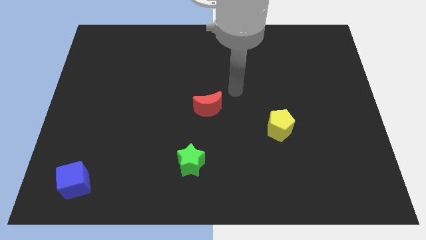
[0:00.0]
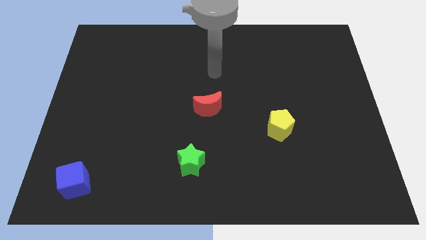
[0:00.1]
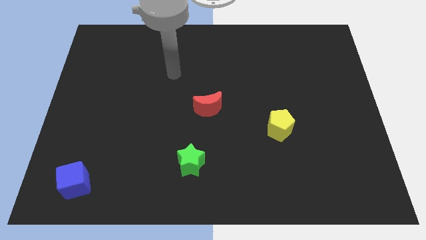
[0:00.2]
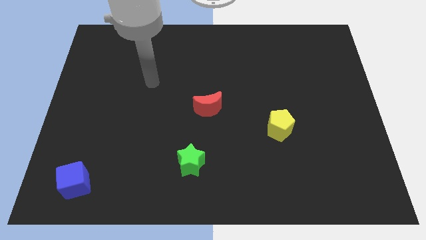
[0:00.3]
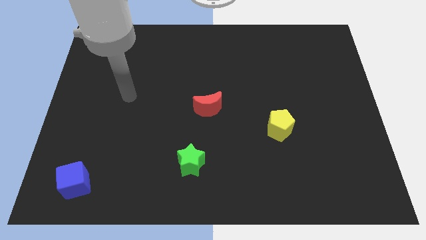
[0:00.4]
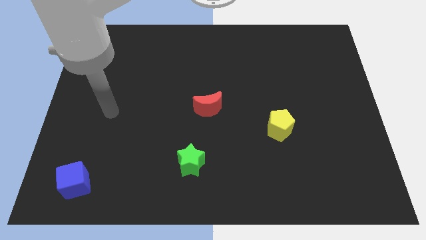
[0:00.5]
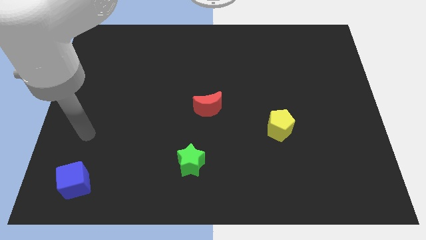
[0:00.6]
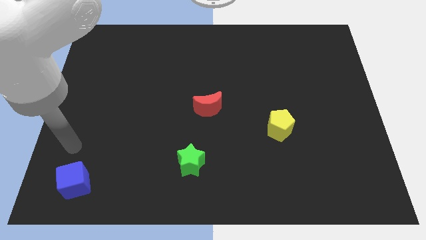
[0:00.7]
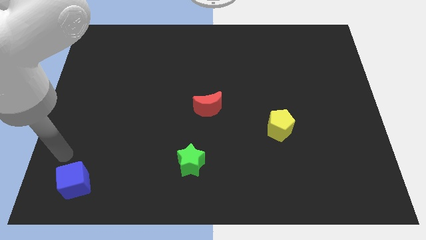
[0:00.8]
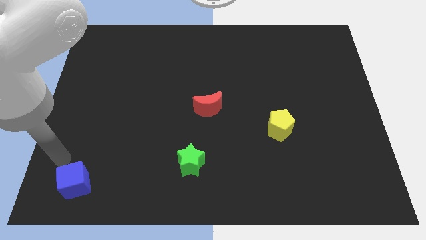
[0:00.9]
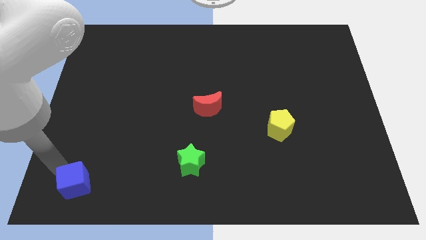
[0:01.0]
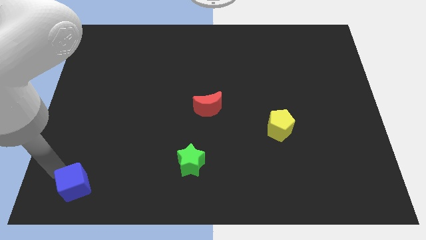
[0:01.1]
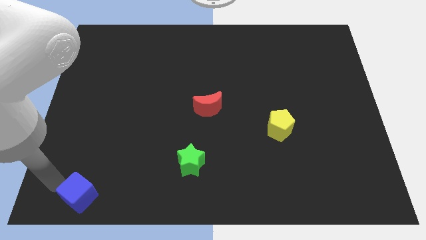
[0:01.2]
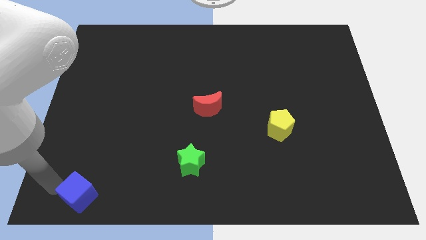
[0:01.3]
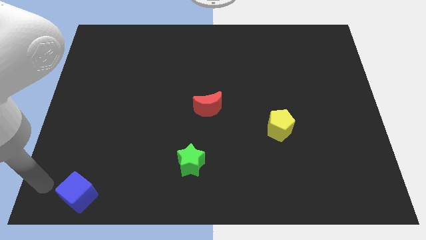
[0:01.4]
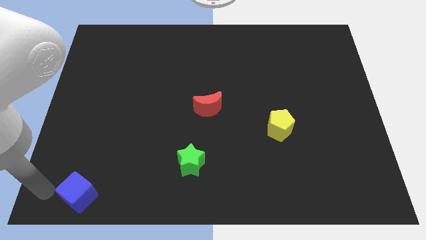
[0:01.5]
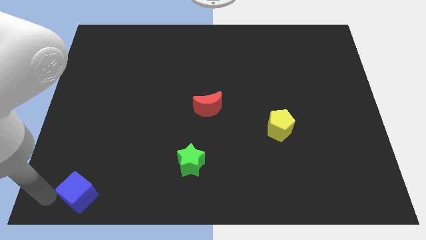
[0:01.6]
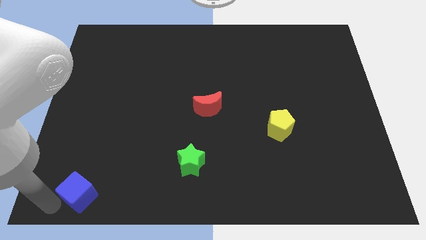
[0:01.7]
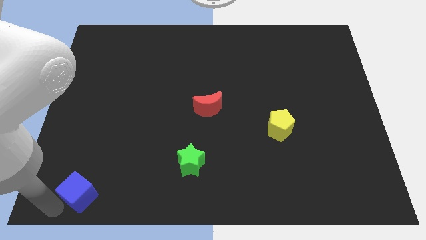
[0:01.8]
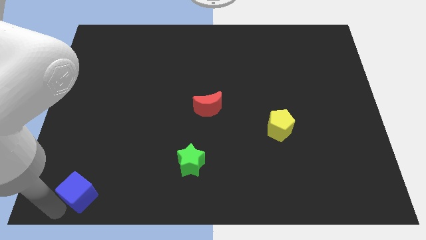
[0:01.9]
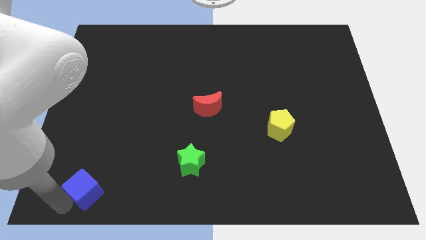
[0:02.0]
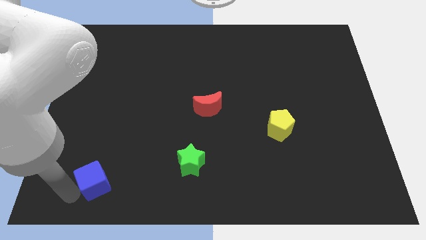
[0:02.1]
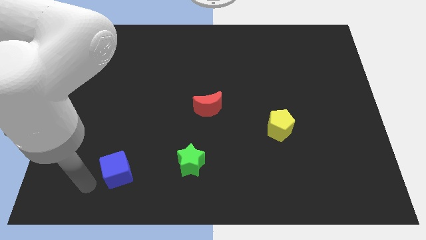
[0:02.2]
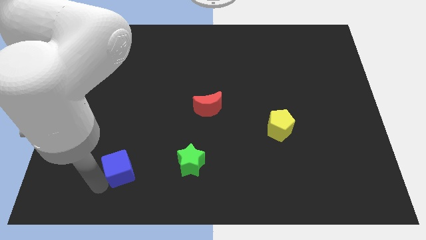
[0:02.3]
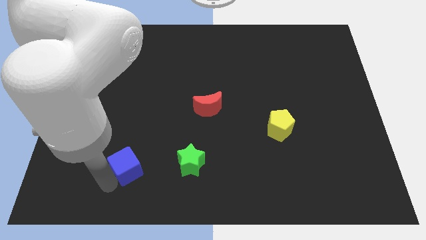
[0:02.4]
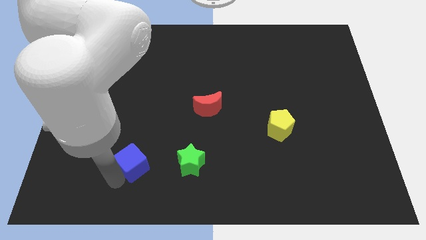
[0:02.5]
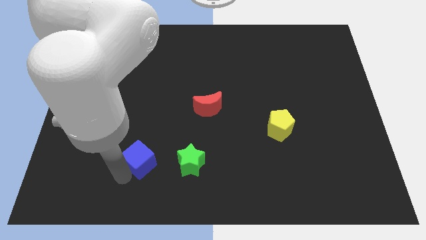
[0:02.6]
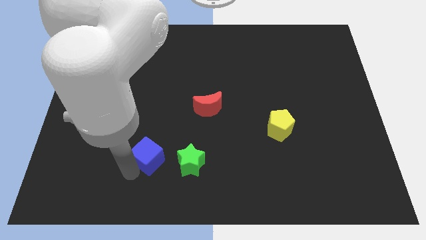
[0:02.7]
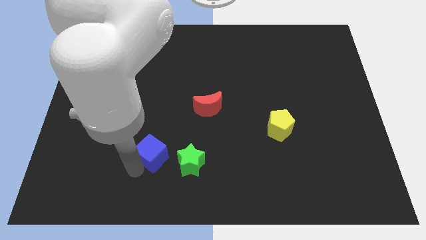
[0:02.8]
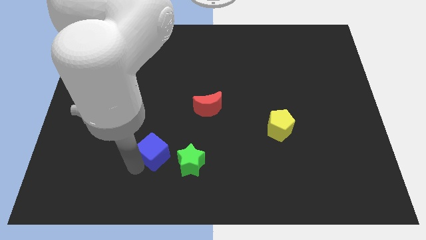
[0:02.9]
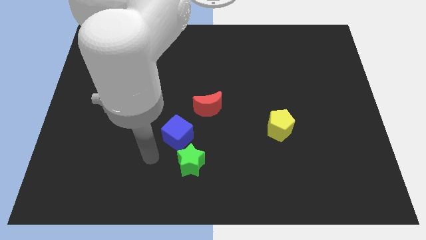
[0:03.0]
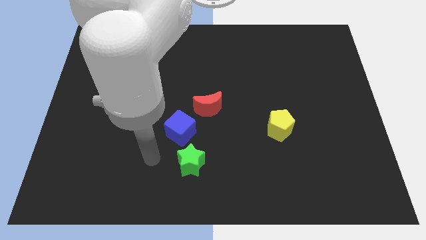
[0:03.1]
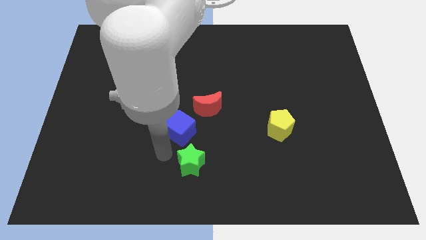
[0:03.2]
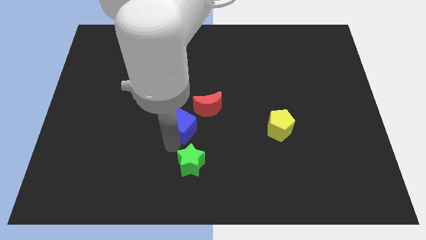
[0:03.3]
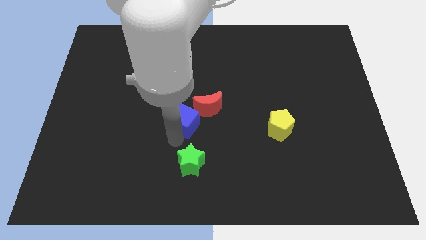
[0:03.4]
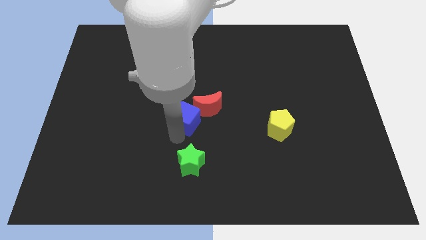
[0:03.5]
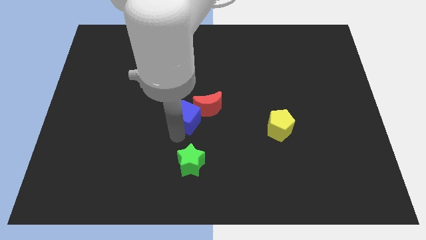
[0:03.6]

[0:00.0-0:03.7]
put the blue block next to the red moon

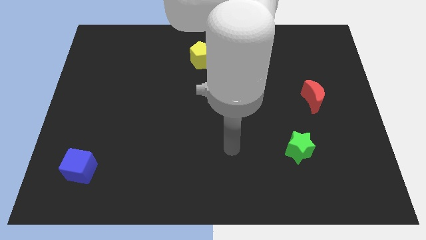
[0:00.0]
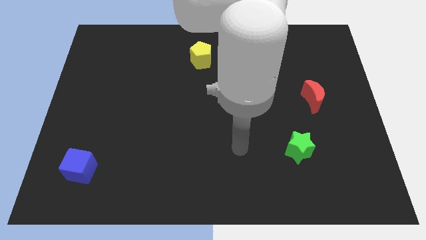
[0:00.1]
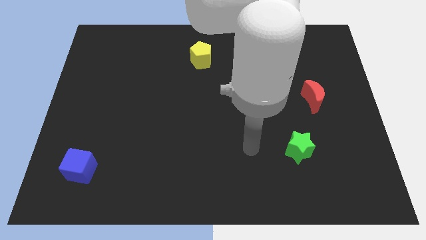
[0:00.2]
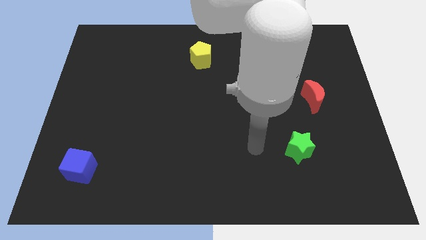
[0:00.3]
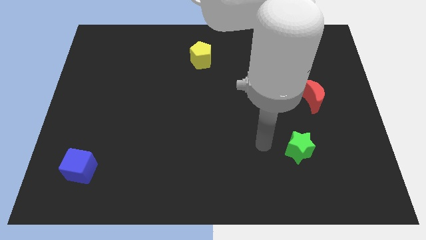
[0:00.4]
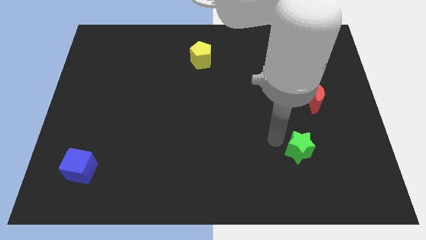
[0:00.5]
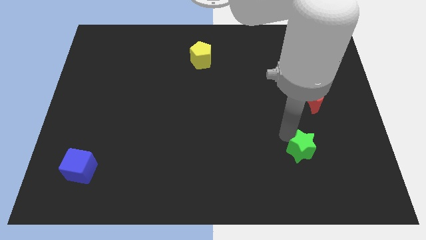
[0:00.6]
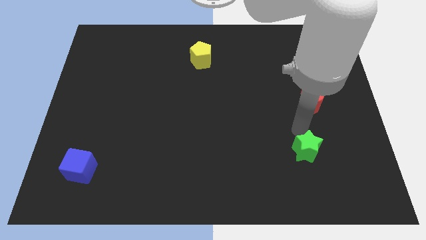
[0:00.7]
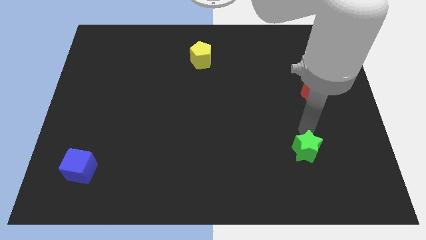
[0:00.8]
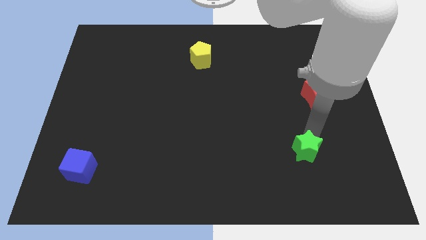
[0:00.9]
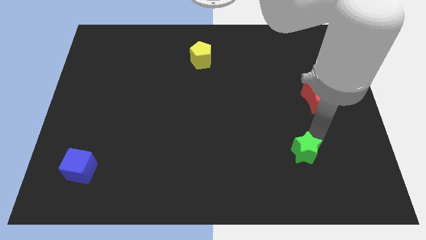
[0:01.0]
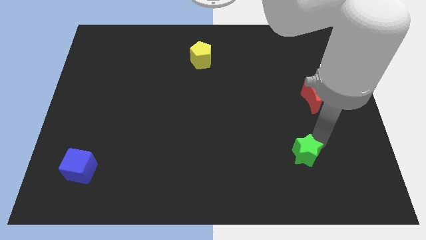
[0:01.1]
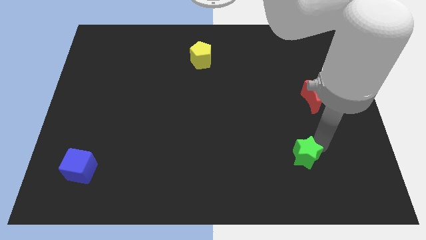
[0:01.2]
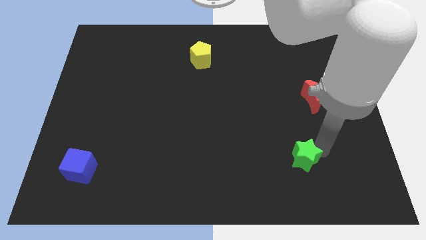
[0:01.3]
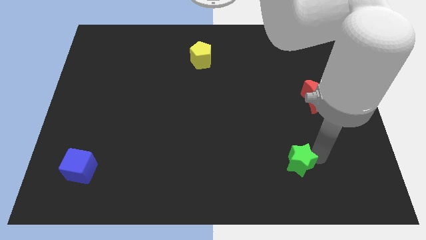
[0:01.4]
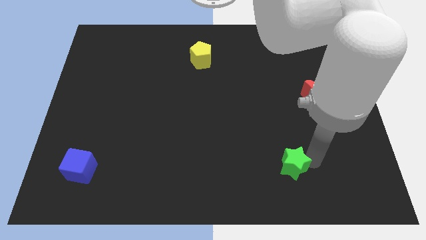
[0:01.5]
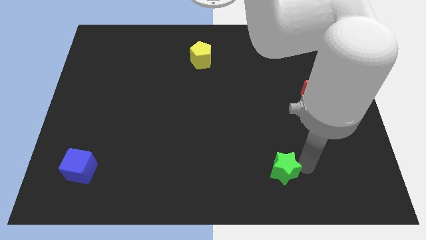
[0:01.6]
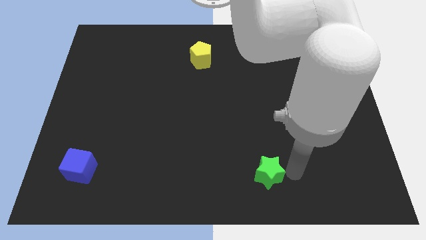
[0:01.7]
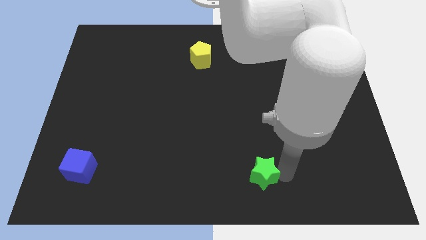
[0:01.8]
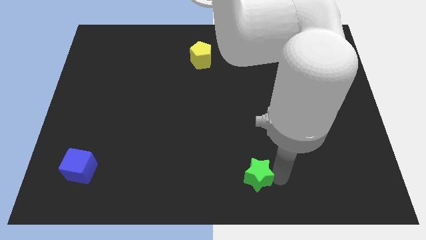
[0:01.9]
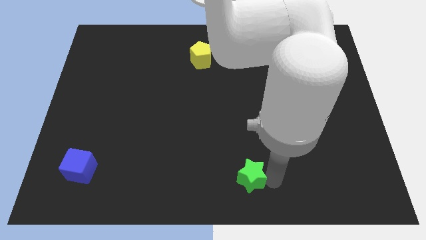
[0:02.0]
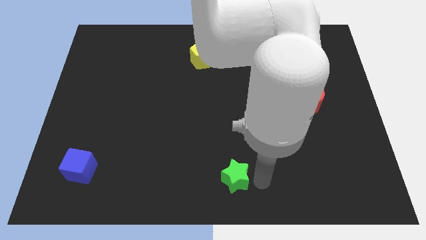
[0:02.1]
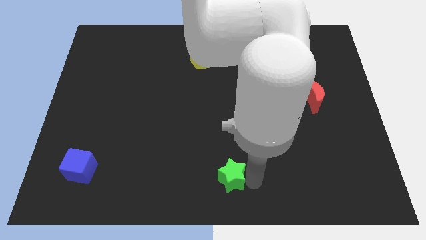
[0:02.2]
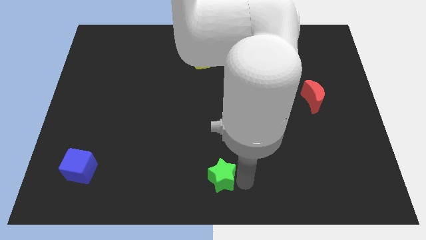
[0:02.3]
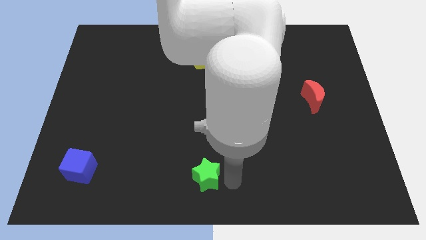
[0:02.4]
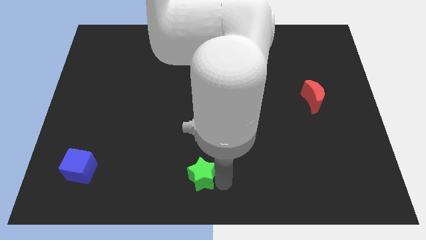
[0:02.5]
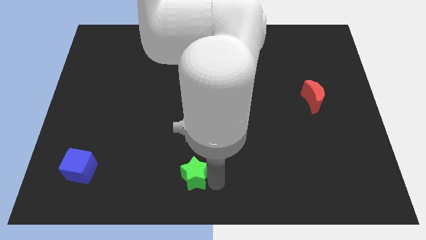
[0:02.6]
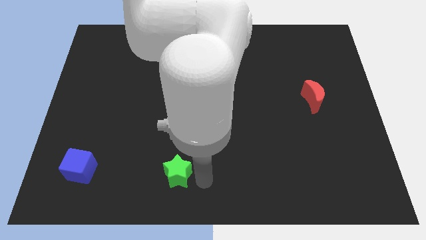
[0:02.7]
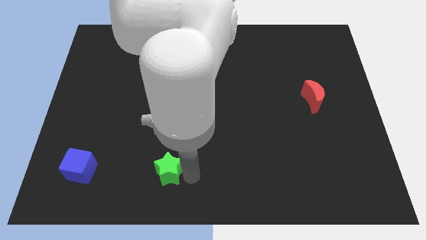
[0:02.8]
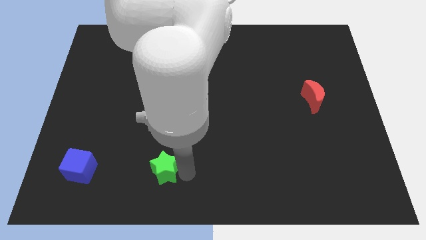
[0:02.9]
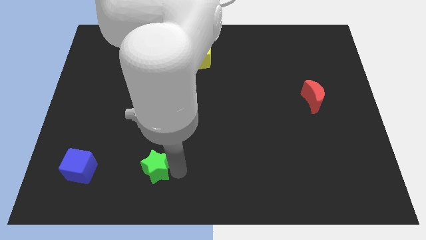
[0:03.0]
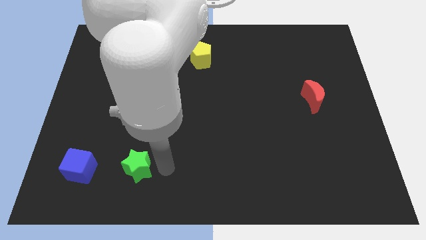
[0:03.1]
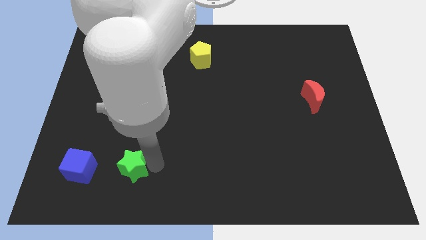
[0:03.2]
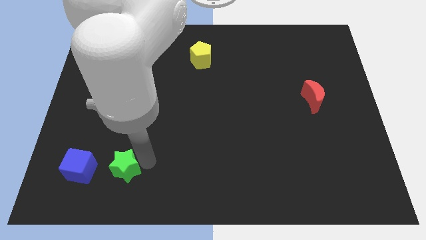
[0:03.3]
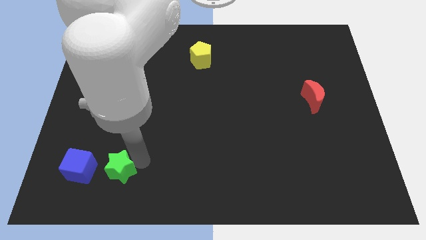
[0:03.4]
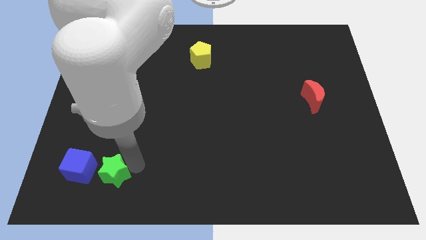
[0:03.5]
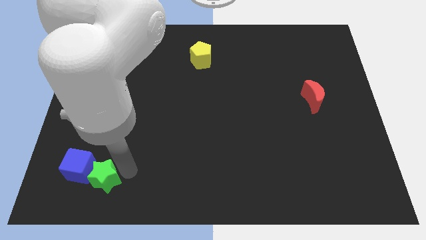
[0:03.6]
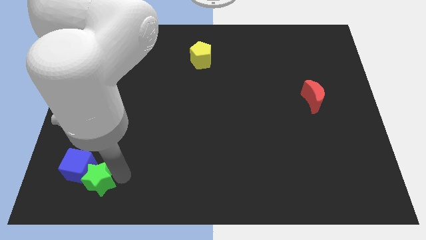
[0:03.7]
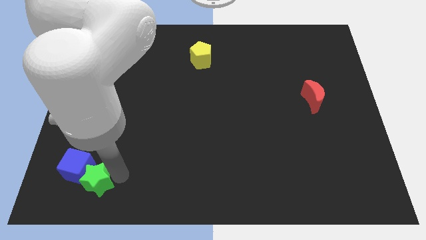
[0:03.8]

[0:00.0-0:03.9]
slide the star close to the blue cube

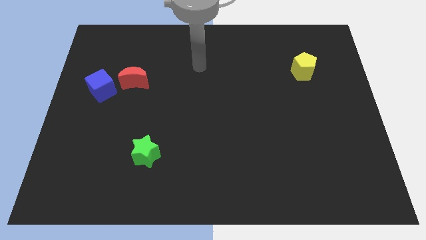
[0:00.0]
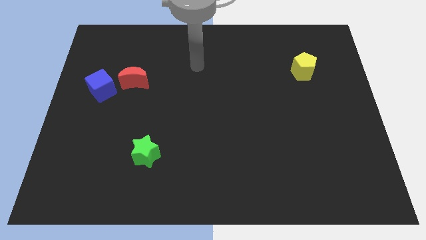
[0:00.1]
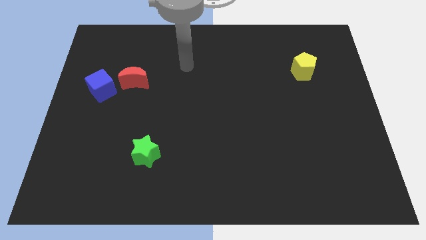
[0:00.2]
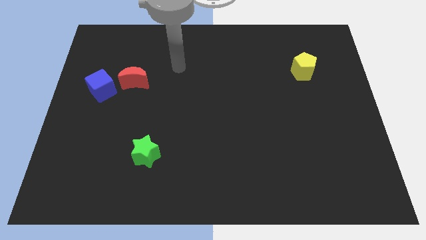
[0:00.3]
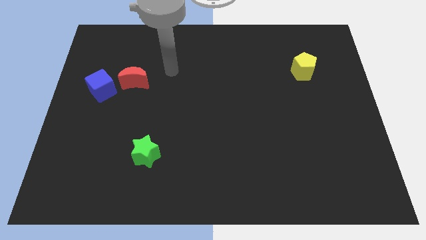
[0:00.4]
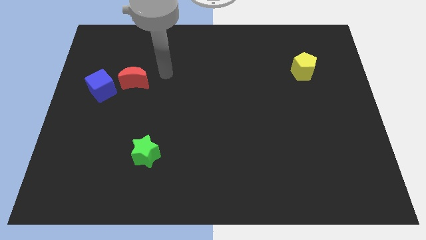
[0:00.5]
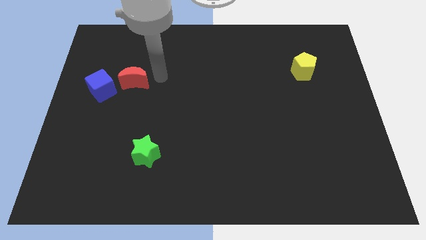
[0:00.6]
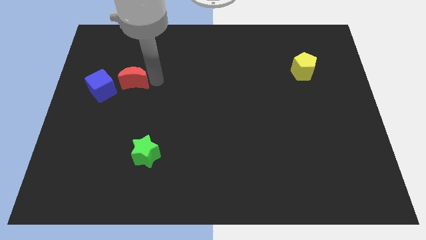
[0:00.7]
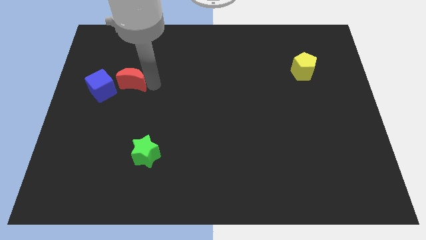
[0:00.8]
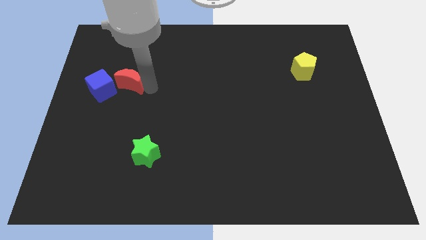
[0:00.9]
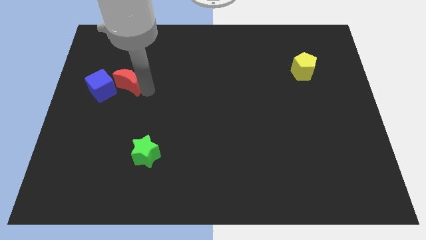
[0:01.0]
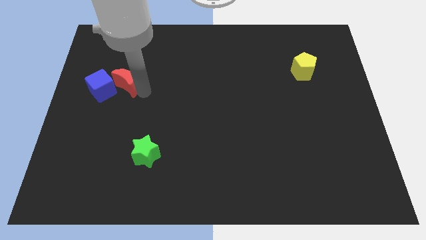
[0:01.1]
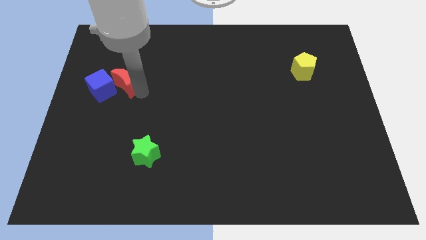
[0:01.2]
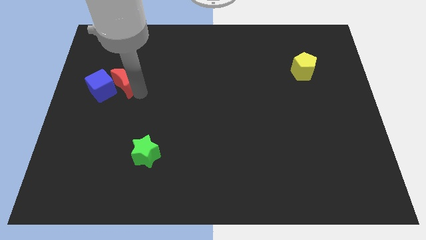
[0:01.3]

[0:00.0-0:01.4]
push the moon to the cube
